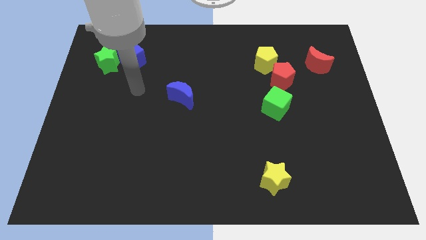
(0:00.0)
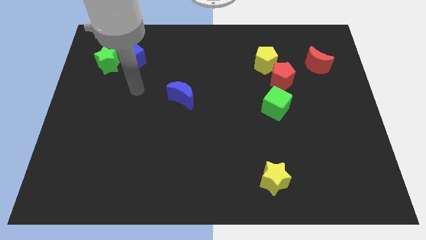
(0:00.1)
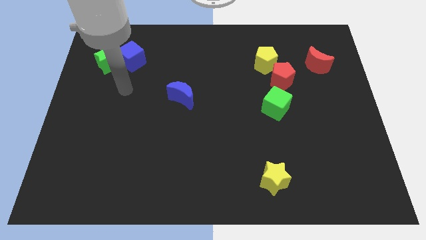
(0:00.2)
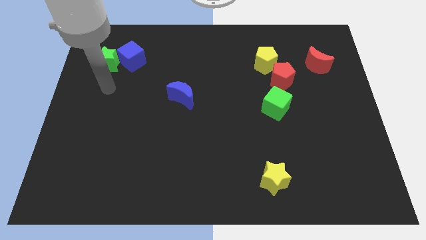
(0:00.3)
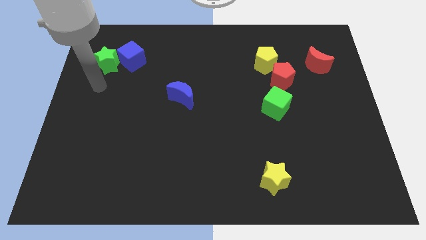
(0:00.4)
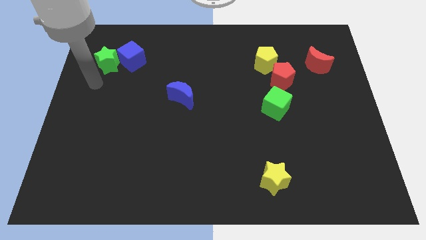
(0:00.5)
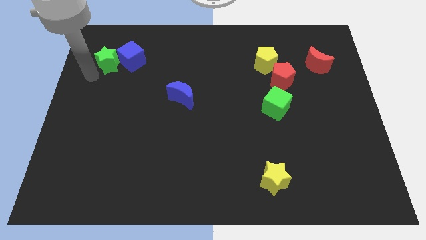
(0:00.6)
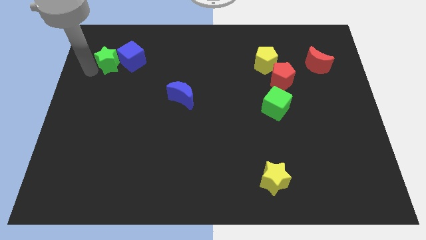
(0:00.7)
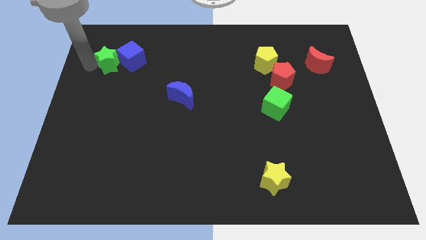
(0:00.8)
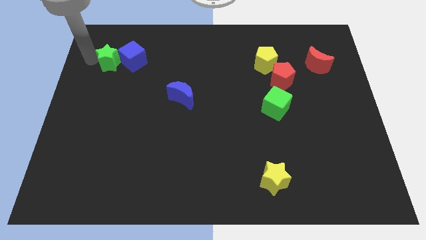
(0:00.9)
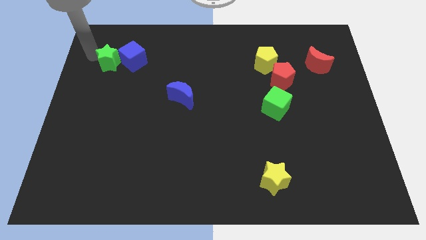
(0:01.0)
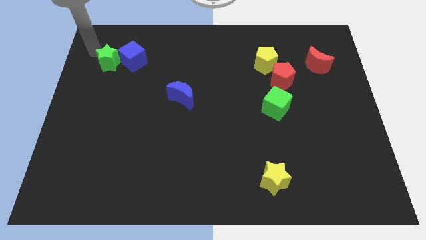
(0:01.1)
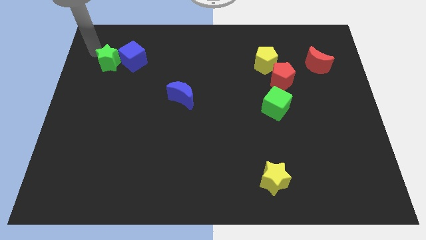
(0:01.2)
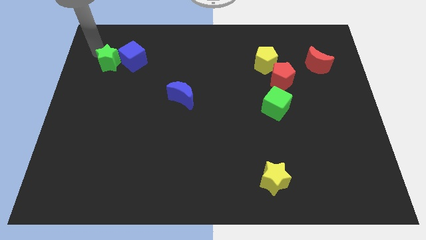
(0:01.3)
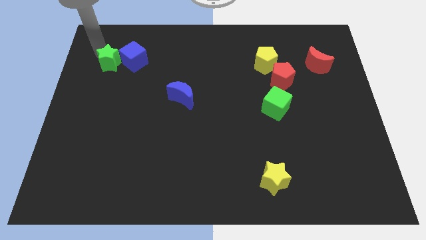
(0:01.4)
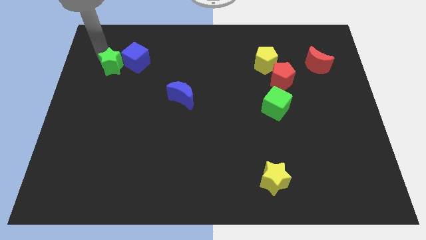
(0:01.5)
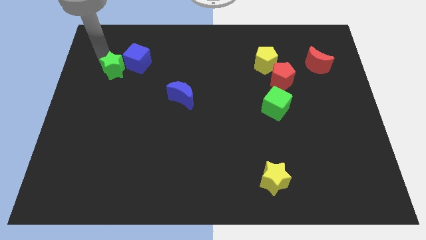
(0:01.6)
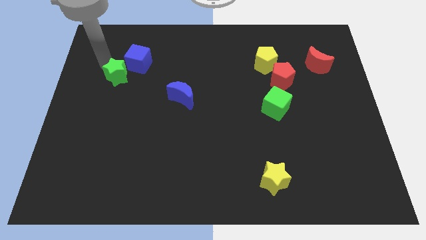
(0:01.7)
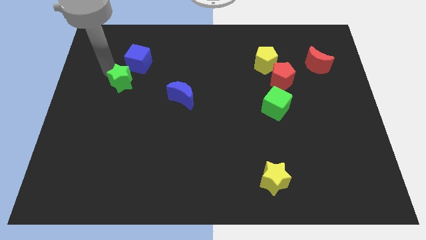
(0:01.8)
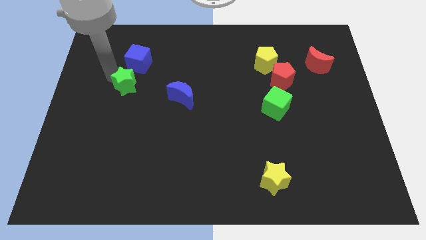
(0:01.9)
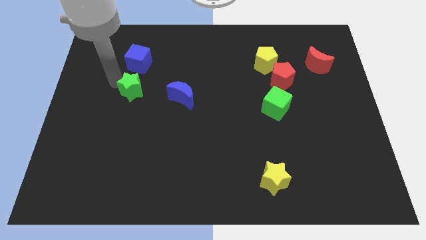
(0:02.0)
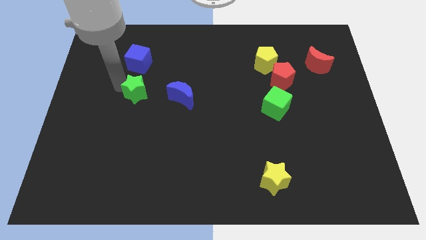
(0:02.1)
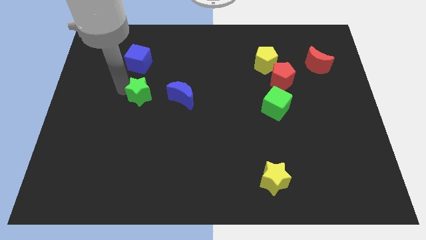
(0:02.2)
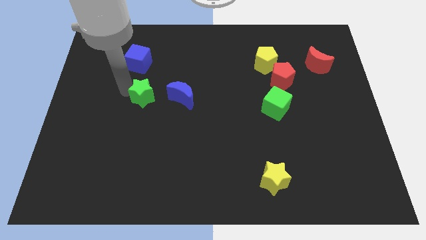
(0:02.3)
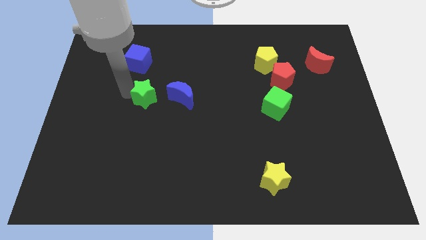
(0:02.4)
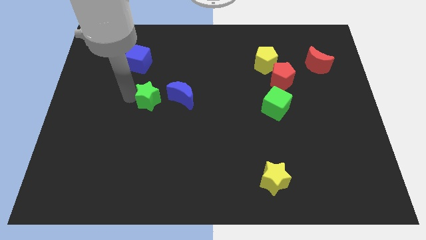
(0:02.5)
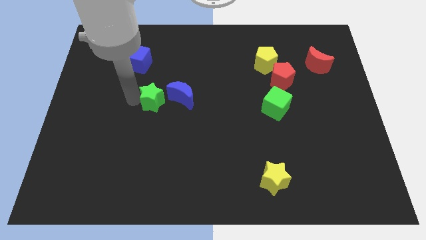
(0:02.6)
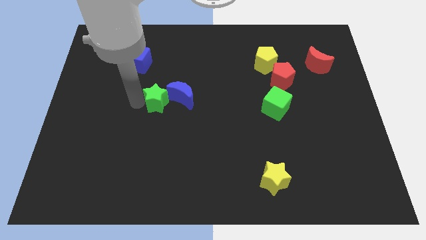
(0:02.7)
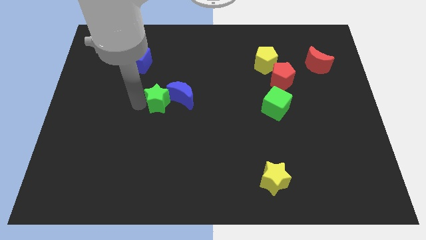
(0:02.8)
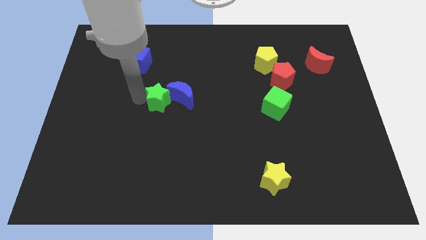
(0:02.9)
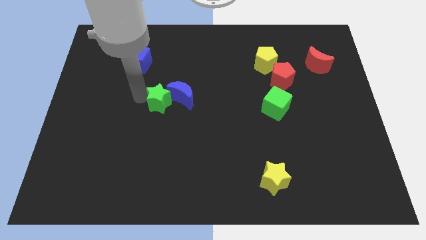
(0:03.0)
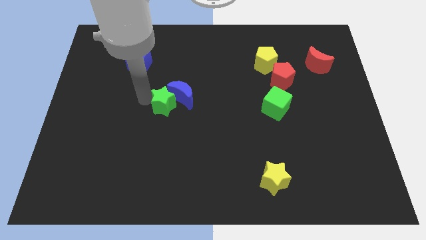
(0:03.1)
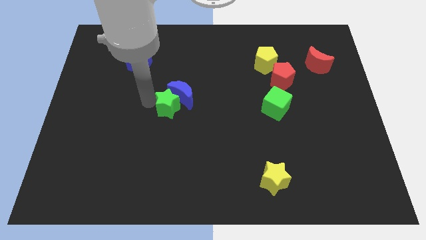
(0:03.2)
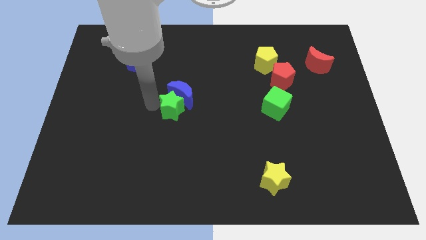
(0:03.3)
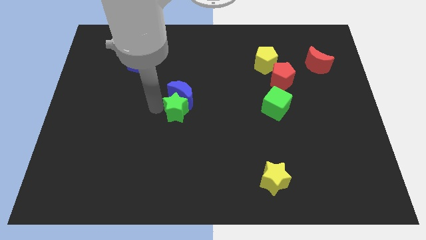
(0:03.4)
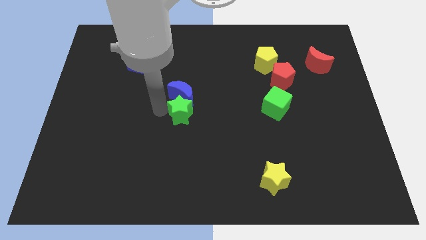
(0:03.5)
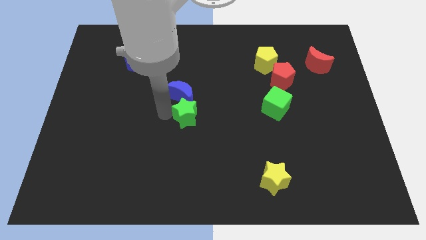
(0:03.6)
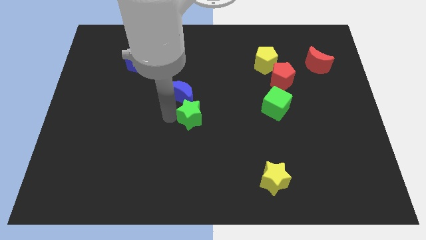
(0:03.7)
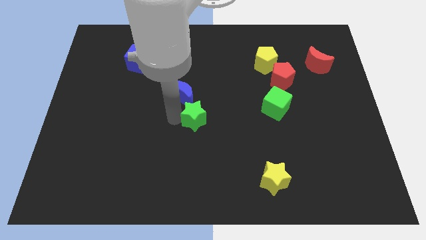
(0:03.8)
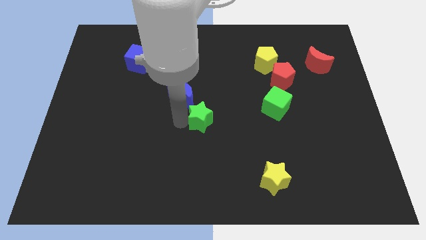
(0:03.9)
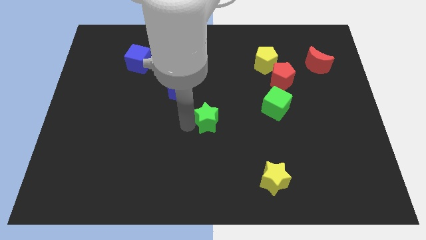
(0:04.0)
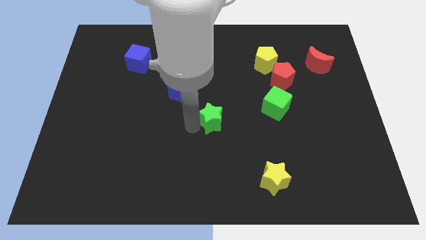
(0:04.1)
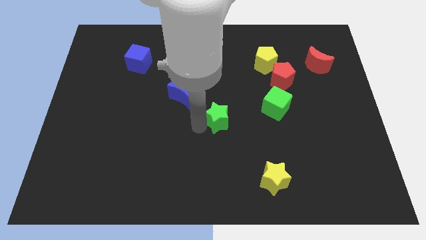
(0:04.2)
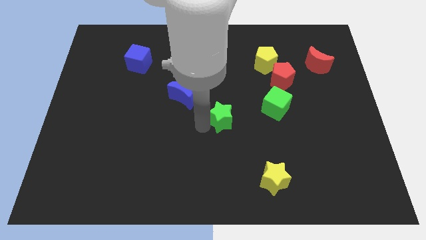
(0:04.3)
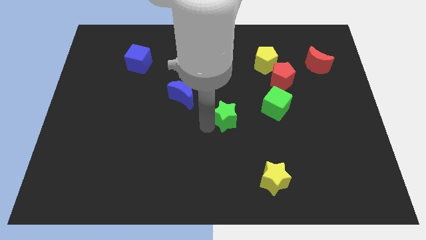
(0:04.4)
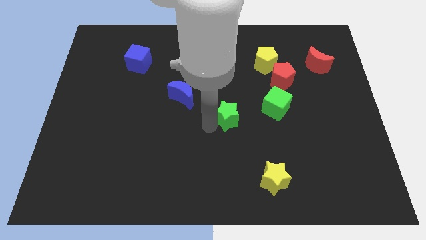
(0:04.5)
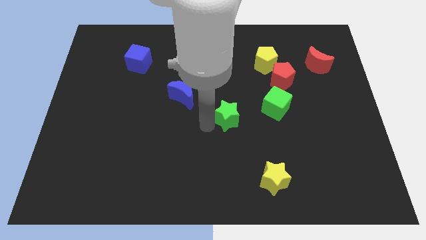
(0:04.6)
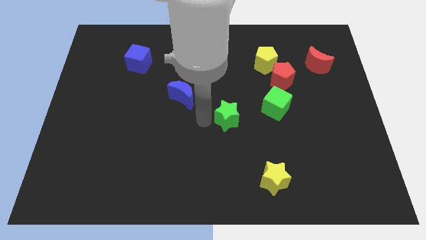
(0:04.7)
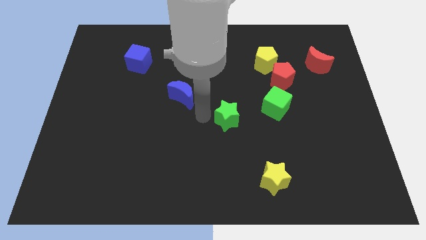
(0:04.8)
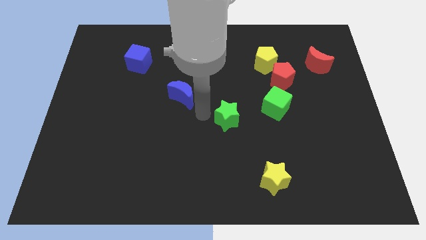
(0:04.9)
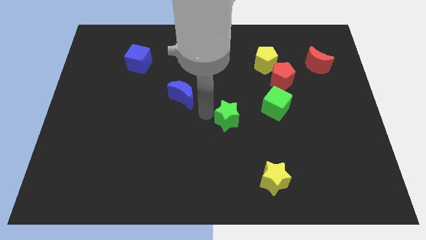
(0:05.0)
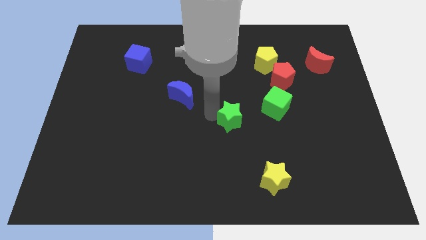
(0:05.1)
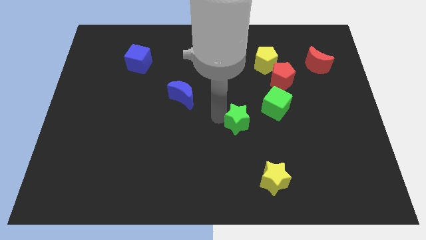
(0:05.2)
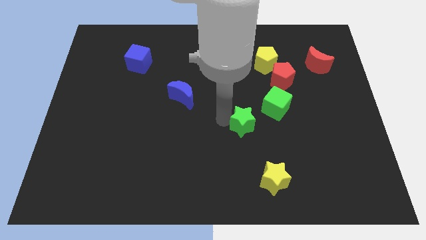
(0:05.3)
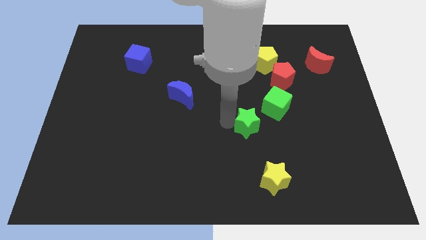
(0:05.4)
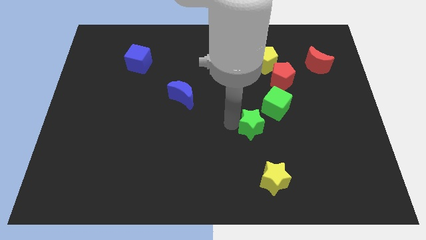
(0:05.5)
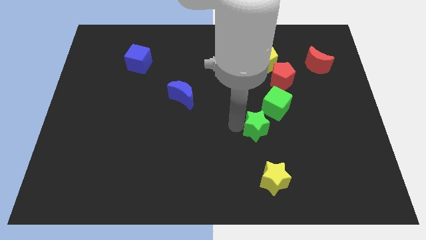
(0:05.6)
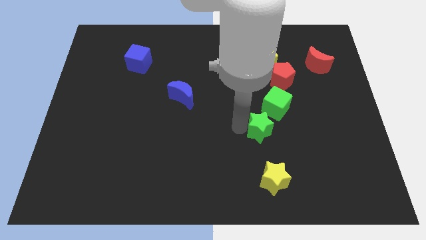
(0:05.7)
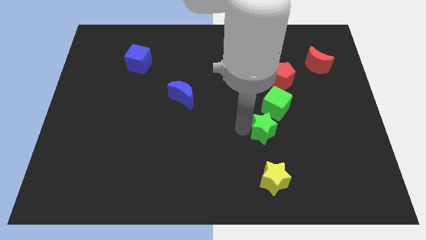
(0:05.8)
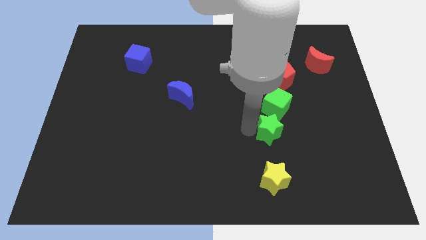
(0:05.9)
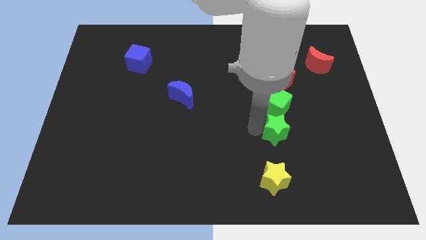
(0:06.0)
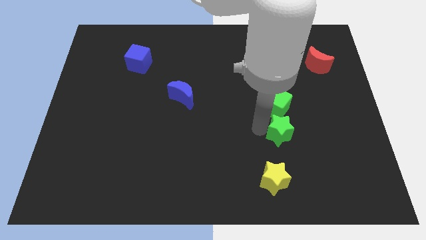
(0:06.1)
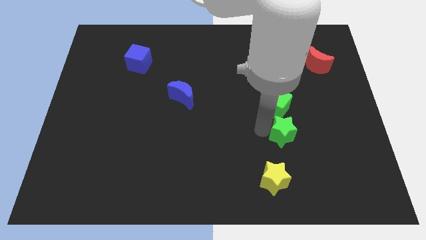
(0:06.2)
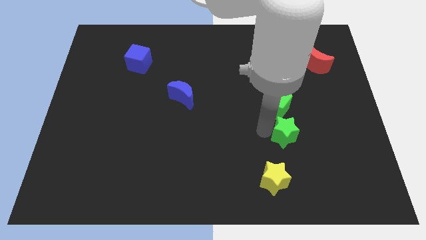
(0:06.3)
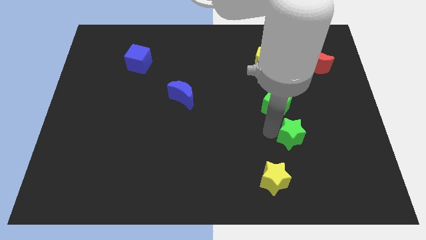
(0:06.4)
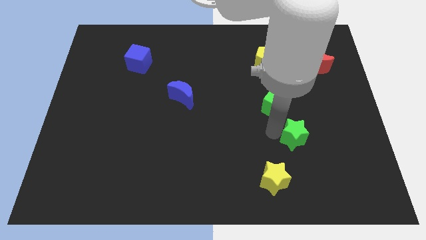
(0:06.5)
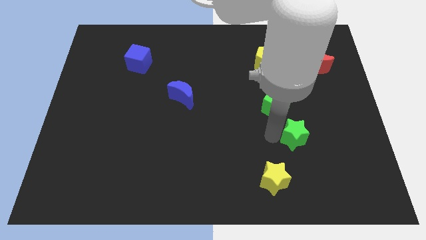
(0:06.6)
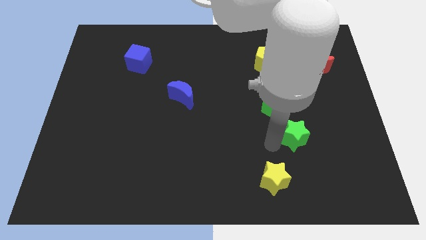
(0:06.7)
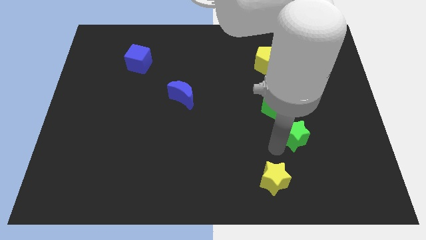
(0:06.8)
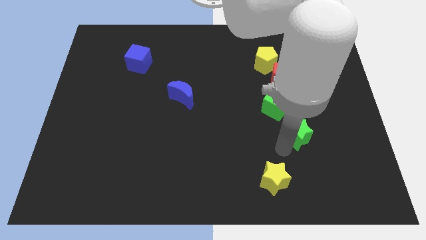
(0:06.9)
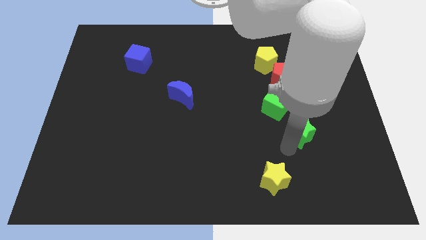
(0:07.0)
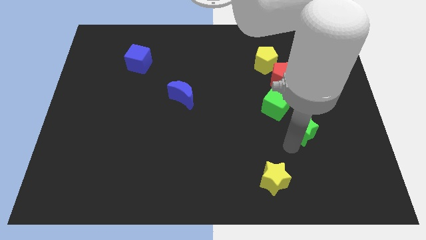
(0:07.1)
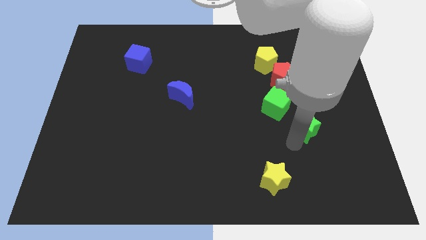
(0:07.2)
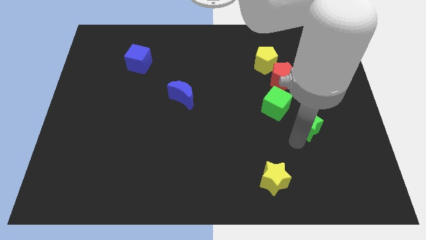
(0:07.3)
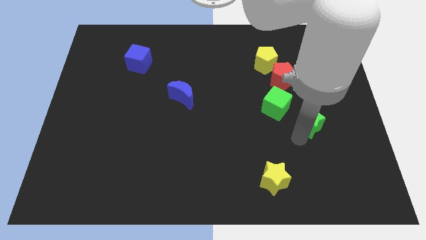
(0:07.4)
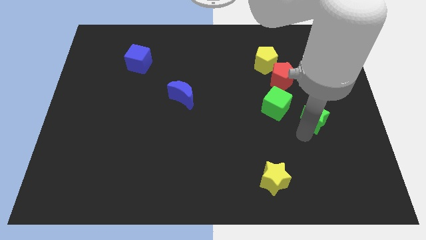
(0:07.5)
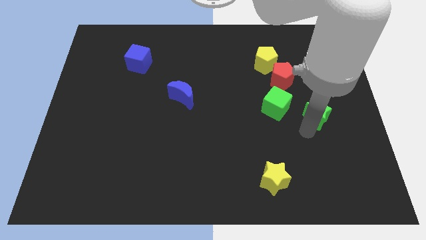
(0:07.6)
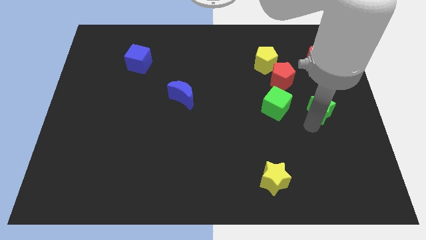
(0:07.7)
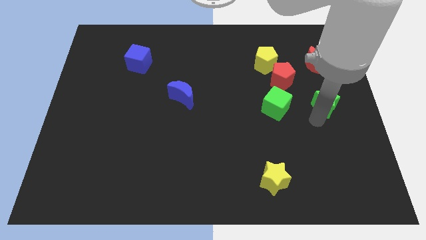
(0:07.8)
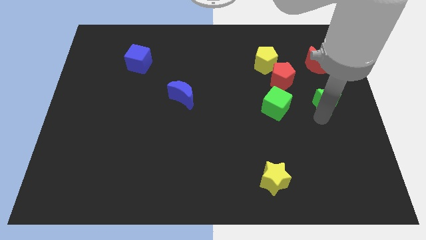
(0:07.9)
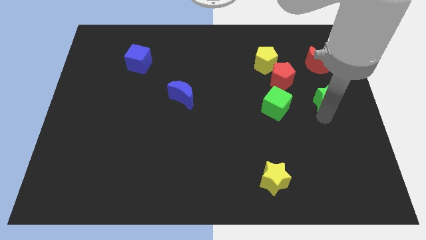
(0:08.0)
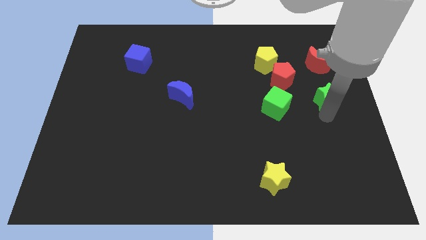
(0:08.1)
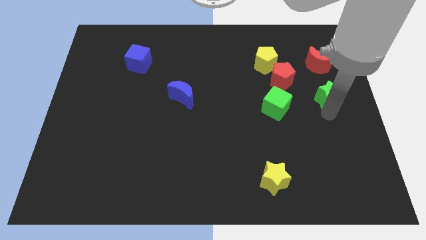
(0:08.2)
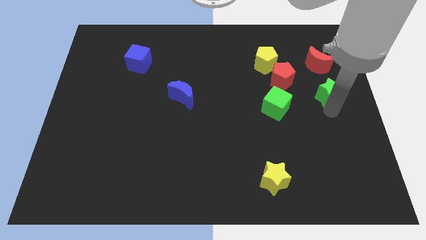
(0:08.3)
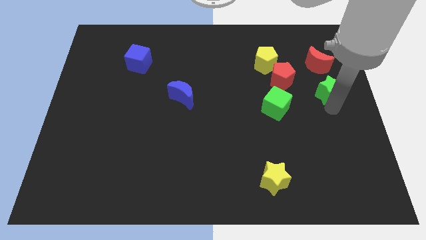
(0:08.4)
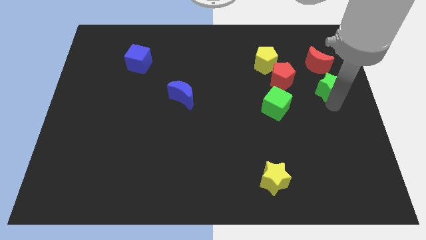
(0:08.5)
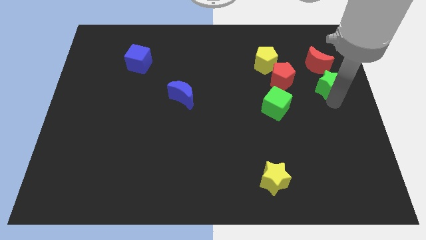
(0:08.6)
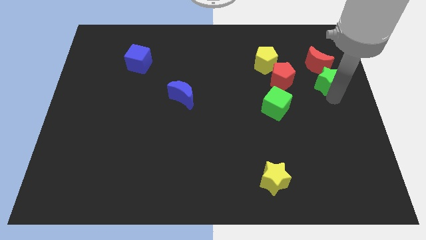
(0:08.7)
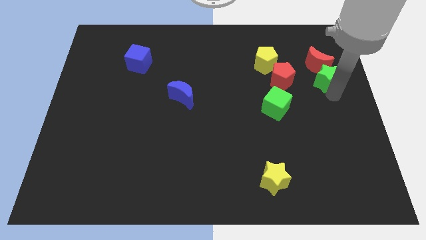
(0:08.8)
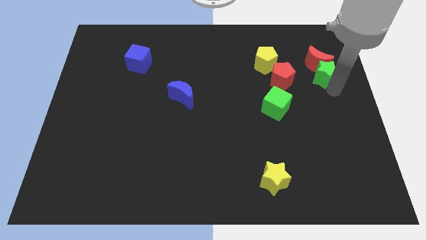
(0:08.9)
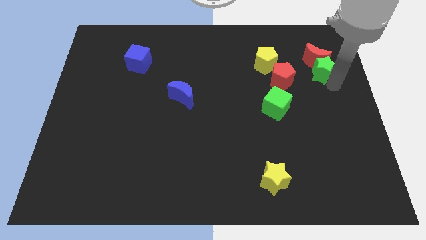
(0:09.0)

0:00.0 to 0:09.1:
move the green star next to the red moon
